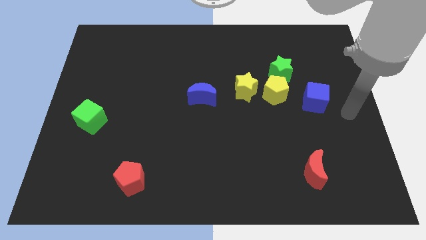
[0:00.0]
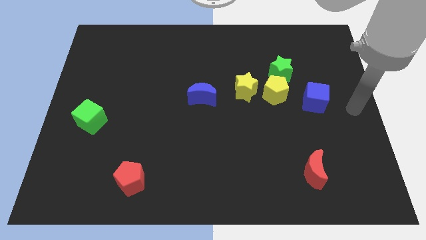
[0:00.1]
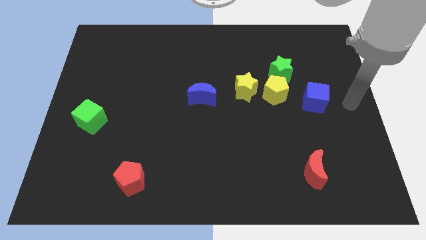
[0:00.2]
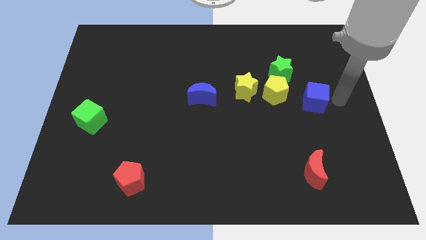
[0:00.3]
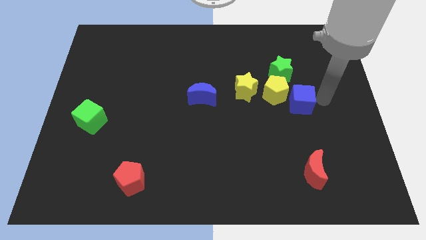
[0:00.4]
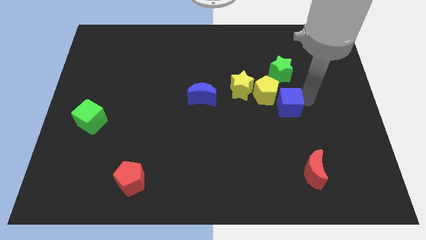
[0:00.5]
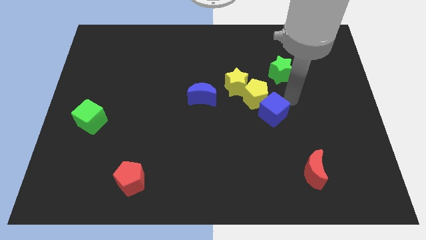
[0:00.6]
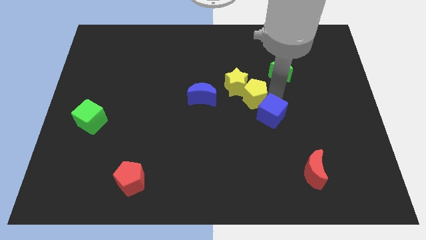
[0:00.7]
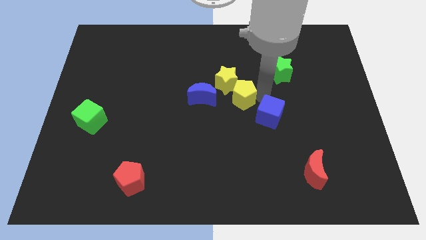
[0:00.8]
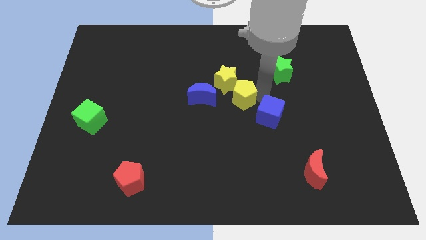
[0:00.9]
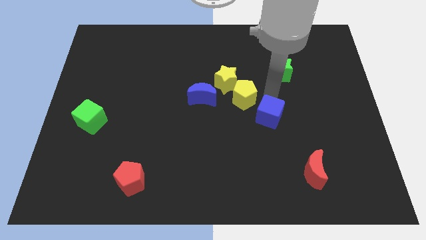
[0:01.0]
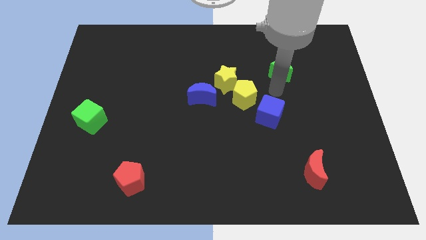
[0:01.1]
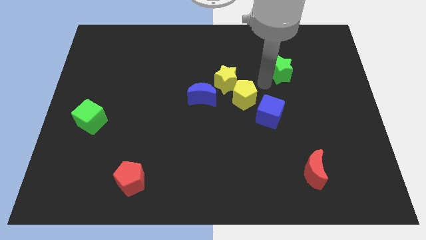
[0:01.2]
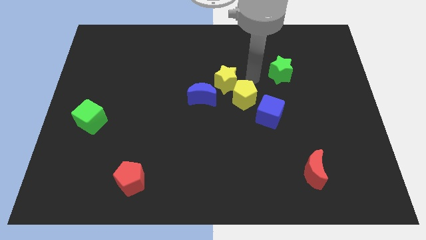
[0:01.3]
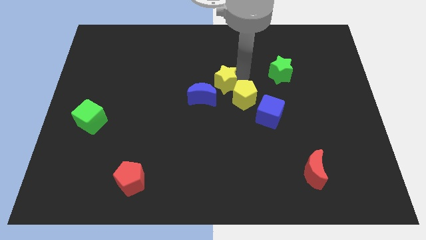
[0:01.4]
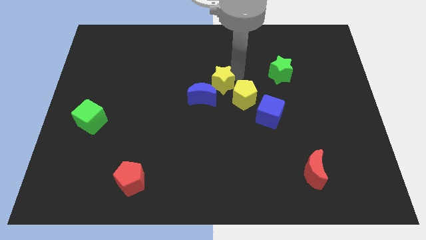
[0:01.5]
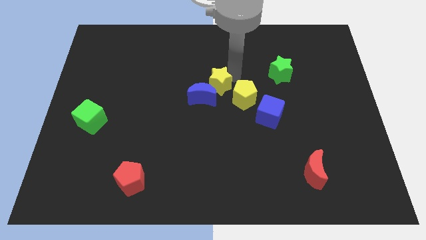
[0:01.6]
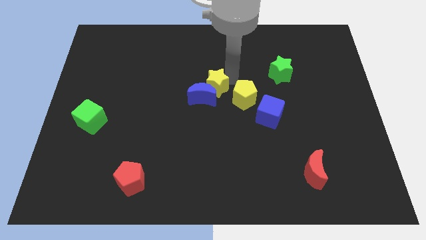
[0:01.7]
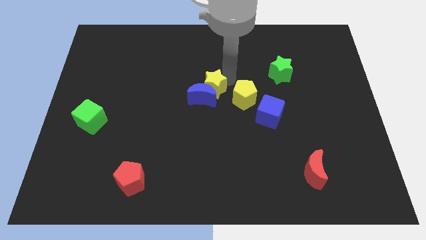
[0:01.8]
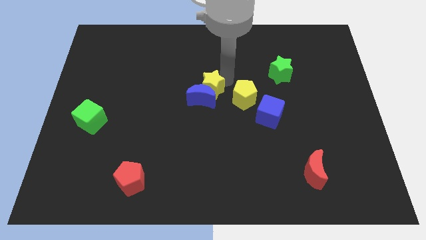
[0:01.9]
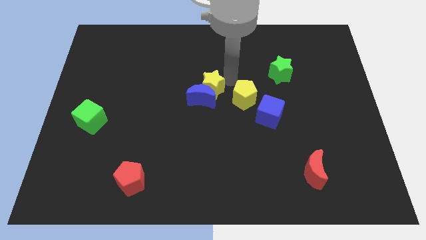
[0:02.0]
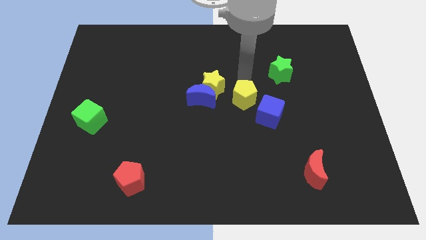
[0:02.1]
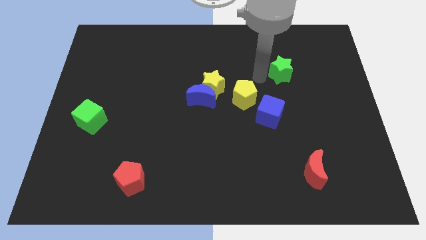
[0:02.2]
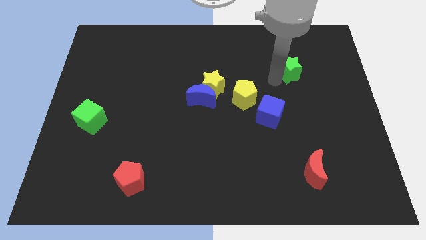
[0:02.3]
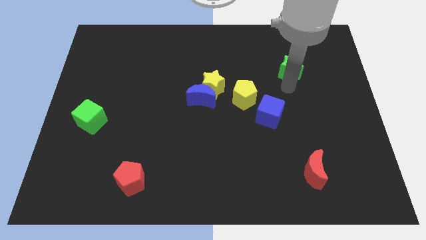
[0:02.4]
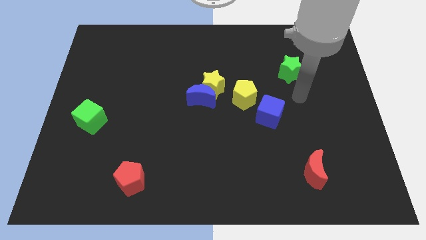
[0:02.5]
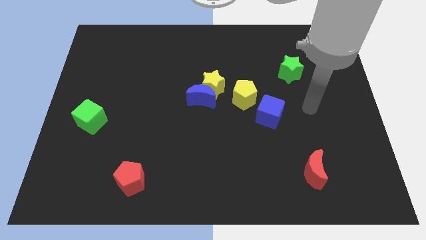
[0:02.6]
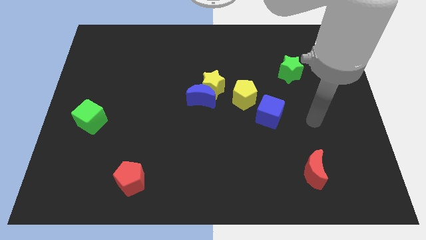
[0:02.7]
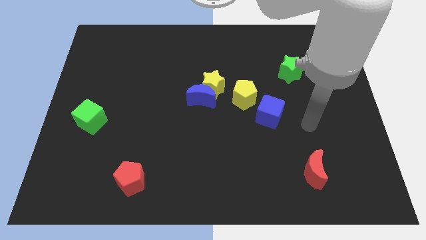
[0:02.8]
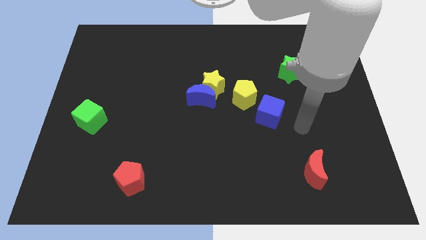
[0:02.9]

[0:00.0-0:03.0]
move the yellow star above the blue moon

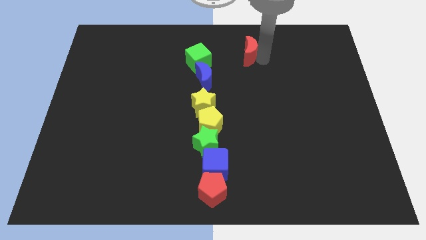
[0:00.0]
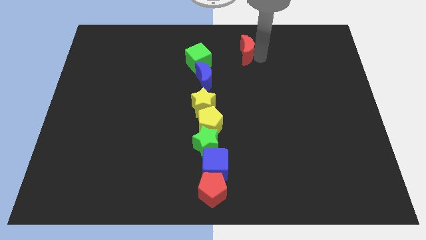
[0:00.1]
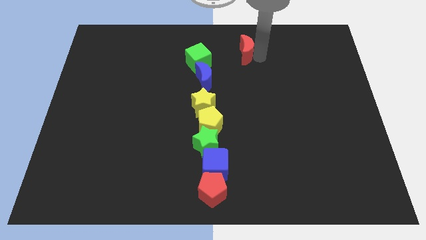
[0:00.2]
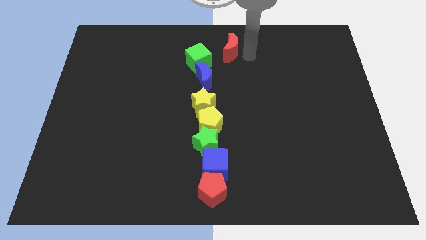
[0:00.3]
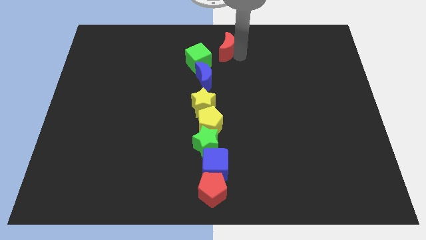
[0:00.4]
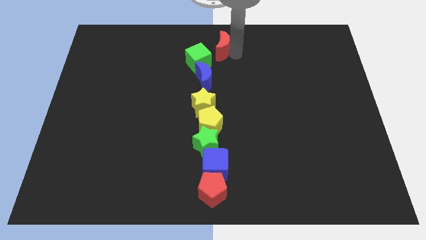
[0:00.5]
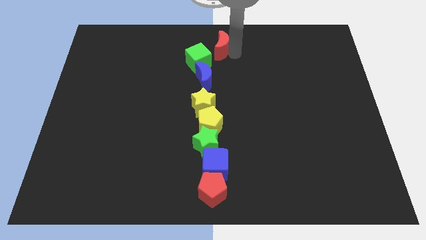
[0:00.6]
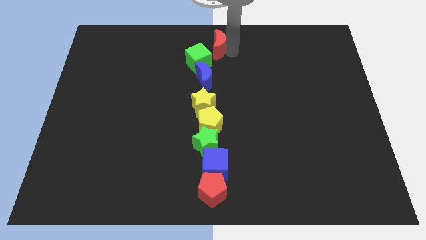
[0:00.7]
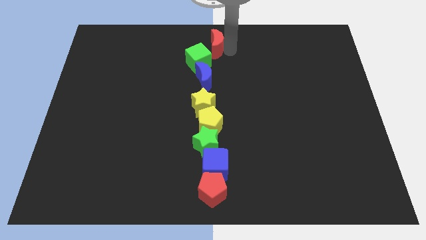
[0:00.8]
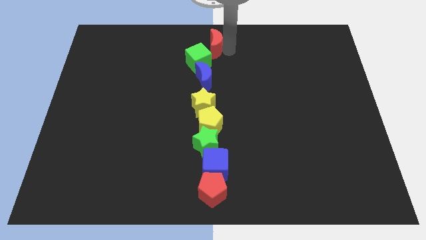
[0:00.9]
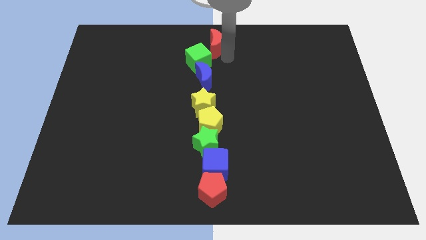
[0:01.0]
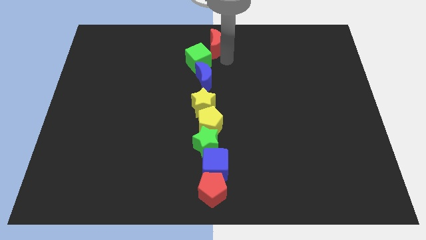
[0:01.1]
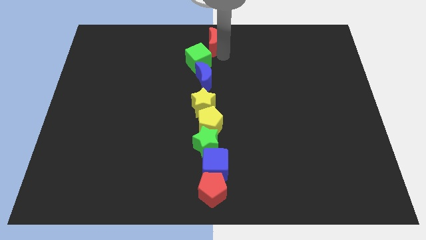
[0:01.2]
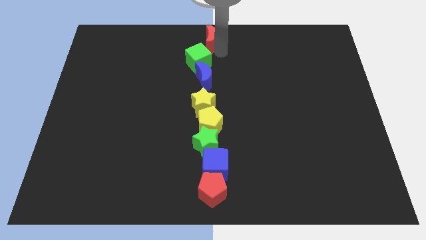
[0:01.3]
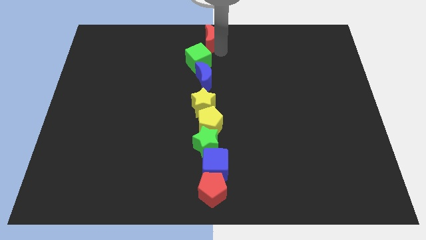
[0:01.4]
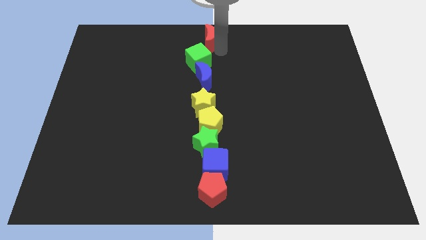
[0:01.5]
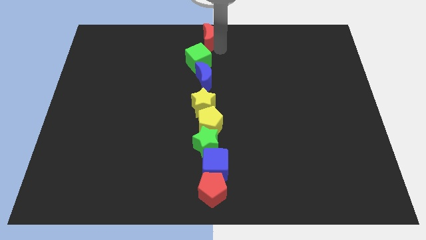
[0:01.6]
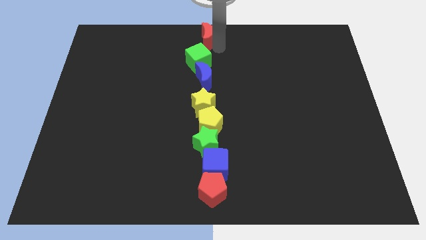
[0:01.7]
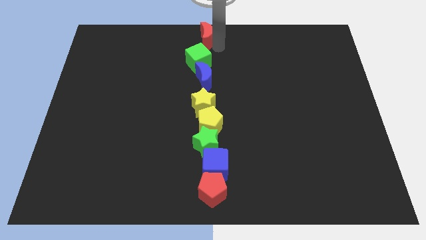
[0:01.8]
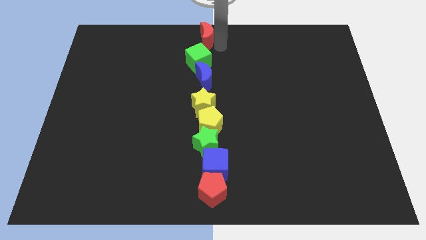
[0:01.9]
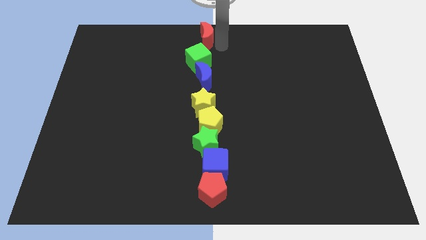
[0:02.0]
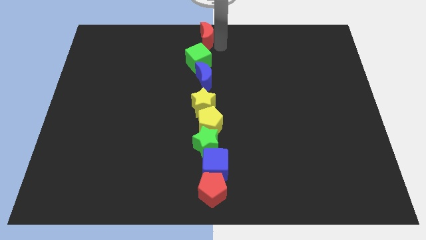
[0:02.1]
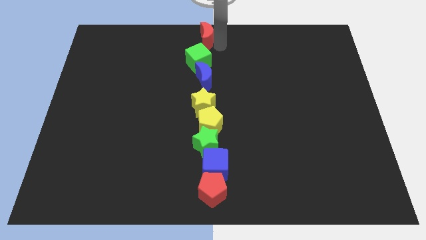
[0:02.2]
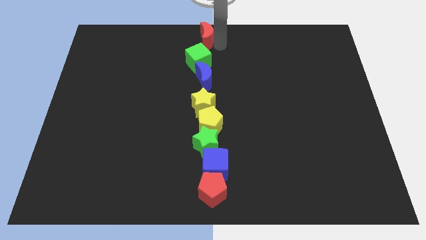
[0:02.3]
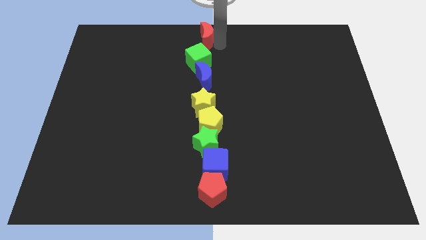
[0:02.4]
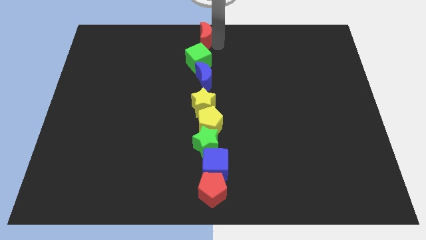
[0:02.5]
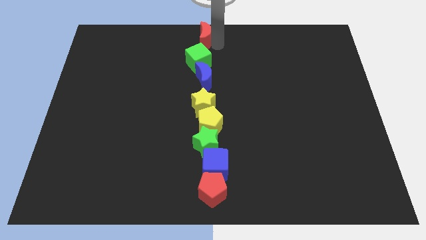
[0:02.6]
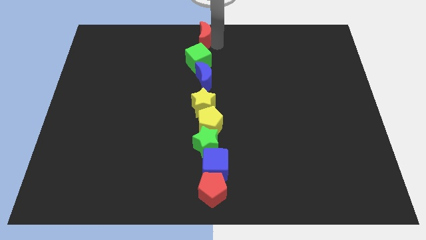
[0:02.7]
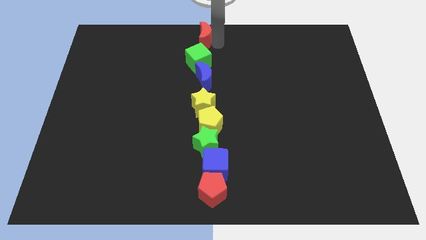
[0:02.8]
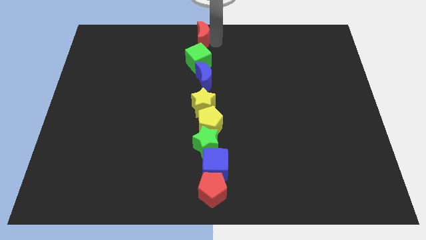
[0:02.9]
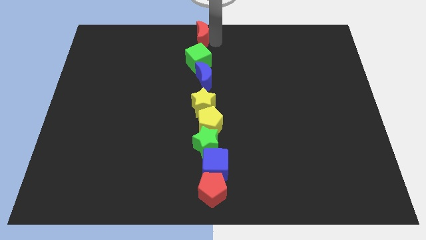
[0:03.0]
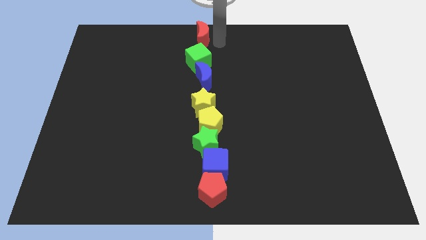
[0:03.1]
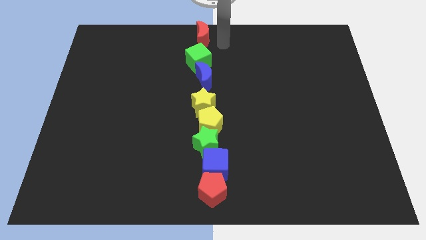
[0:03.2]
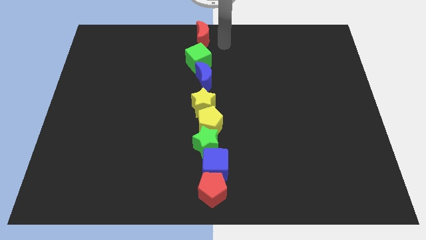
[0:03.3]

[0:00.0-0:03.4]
push the red moon to the top side of the green cube

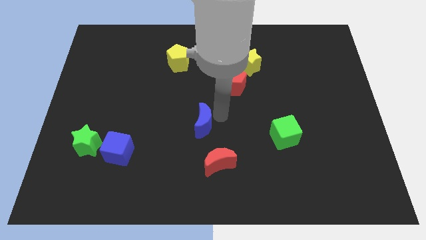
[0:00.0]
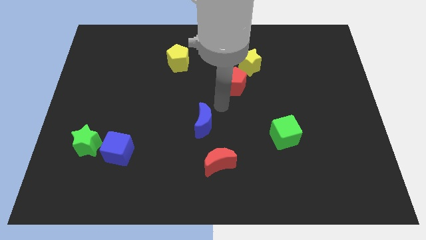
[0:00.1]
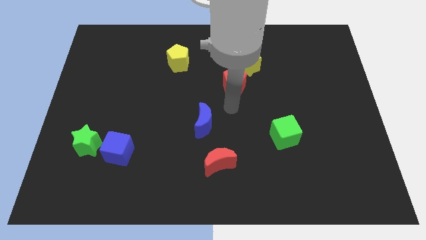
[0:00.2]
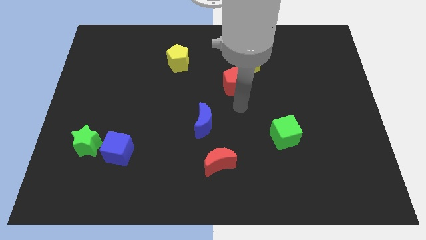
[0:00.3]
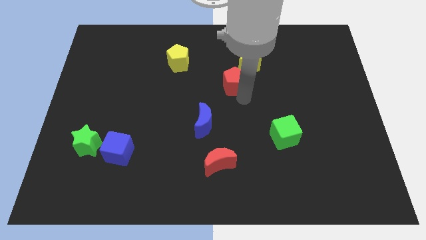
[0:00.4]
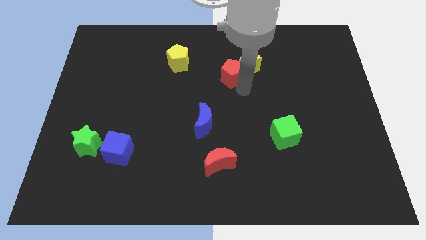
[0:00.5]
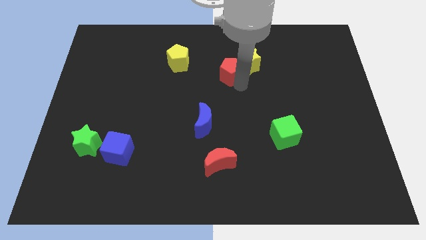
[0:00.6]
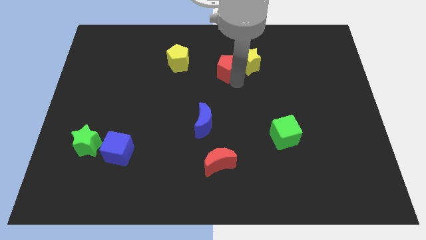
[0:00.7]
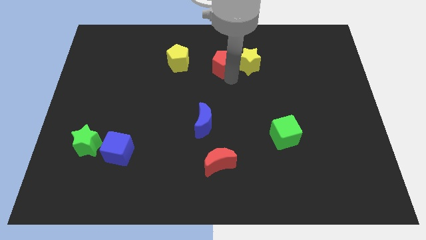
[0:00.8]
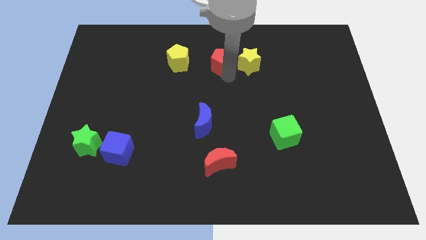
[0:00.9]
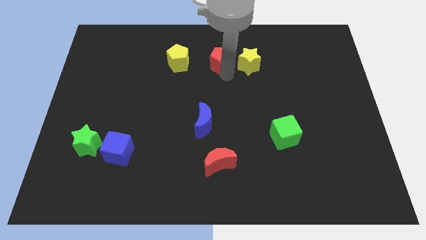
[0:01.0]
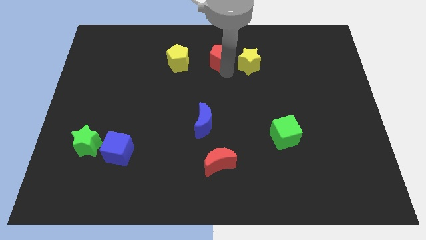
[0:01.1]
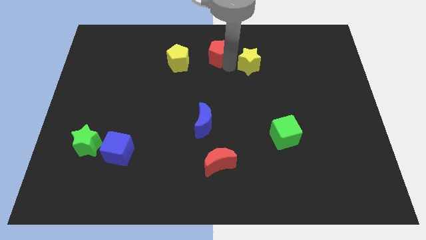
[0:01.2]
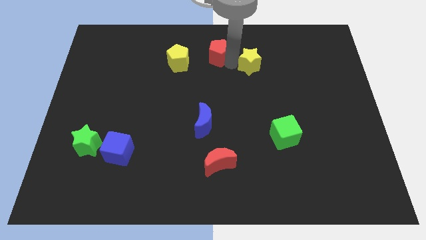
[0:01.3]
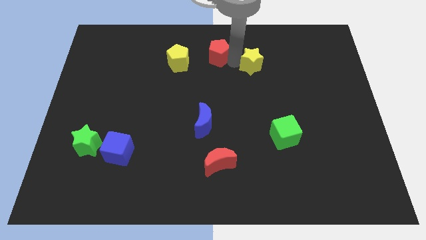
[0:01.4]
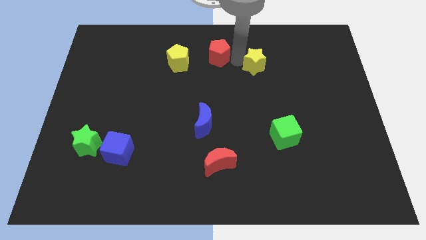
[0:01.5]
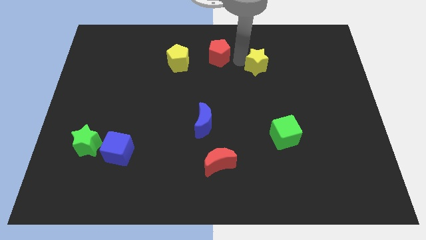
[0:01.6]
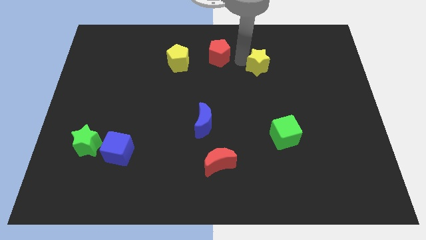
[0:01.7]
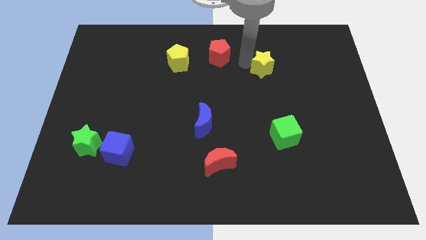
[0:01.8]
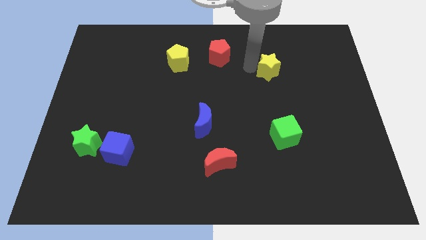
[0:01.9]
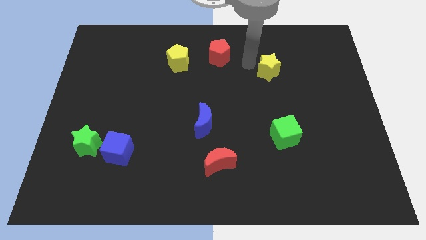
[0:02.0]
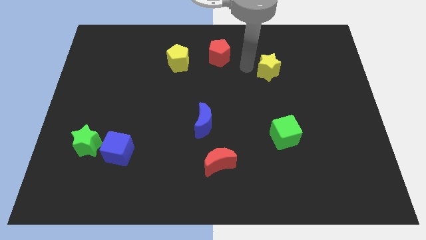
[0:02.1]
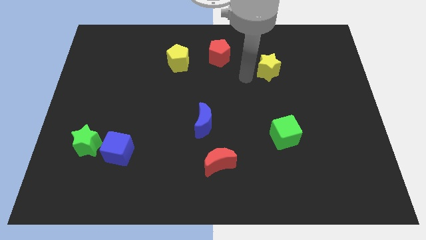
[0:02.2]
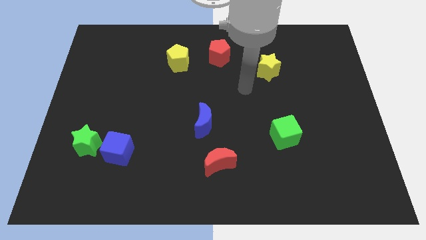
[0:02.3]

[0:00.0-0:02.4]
move red pentagon towards right of yellow pentagon

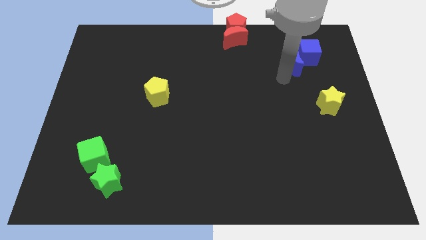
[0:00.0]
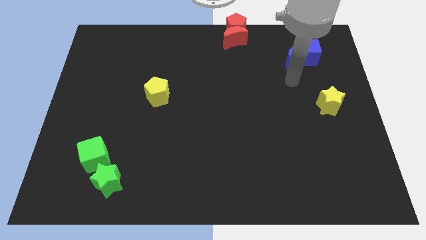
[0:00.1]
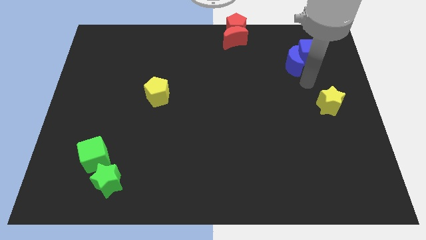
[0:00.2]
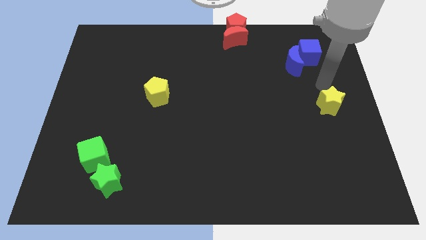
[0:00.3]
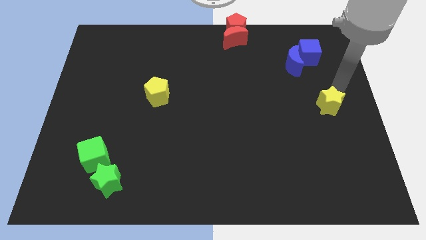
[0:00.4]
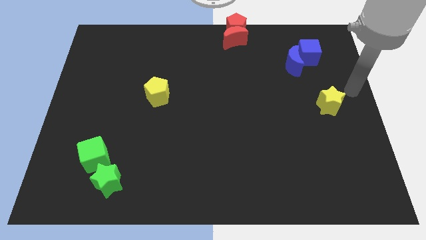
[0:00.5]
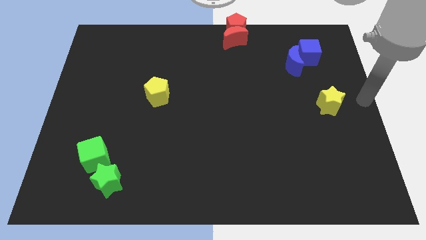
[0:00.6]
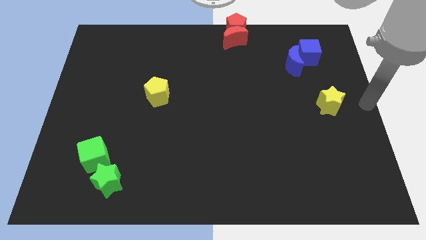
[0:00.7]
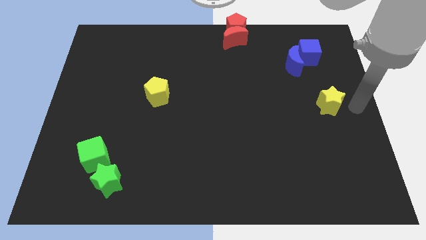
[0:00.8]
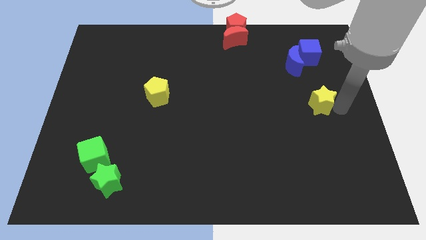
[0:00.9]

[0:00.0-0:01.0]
point your arm to the right beside the yellow star
